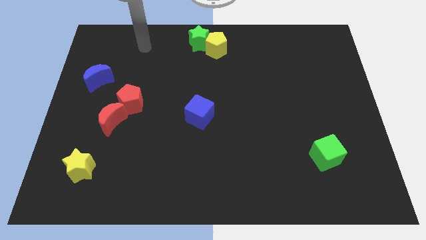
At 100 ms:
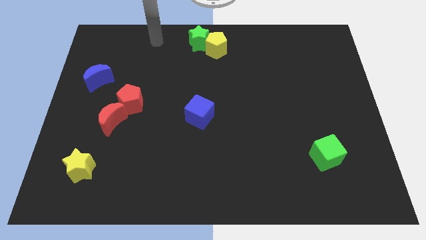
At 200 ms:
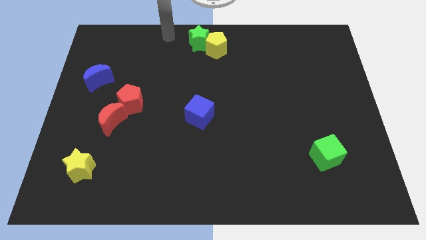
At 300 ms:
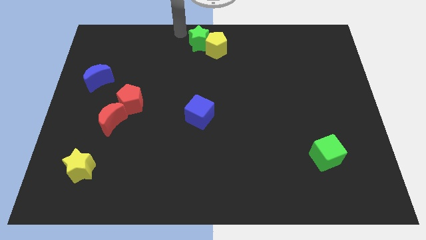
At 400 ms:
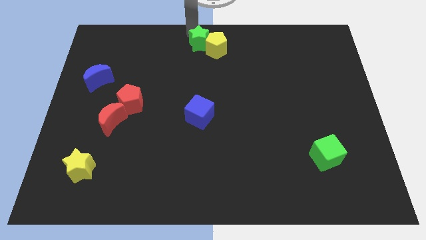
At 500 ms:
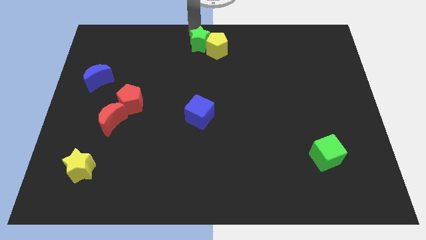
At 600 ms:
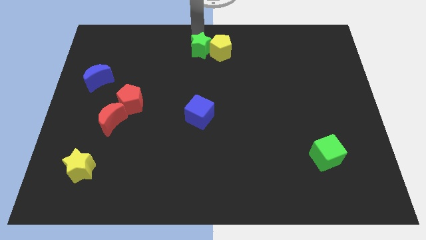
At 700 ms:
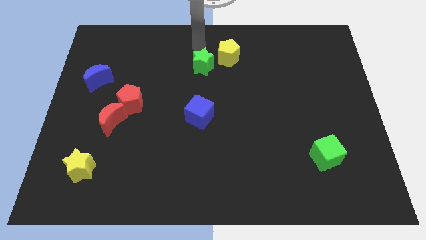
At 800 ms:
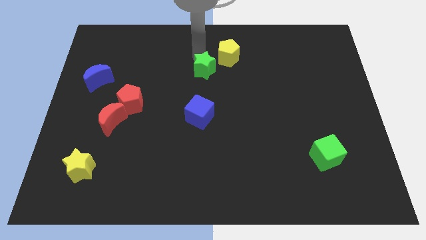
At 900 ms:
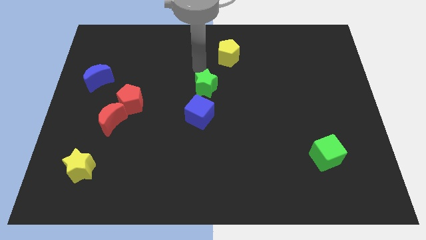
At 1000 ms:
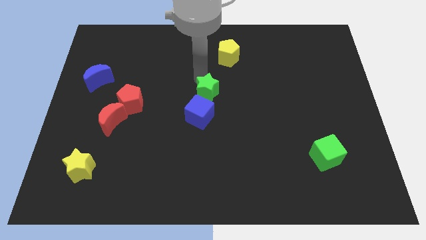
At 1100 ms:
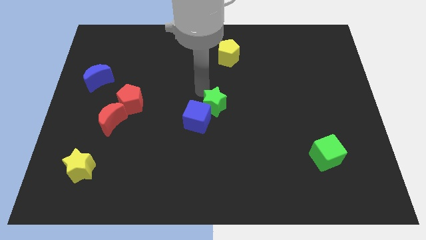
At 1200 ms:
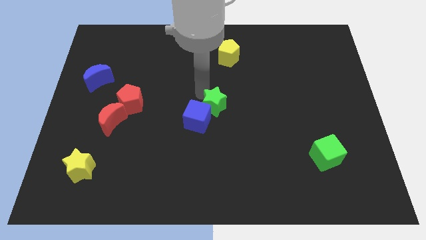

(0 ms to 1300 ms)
slide the green star into the blue moon

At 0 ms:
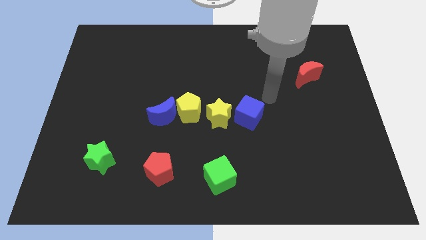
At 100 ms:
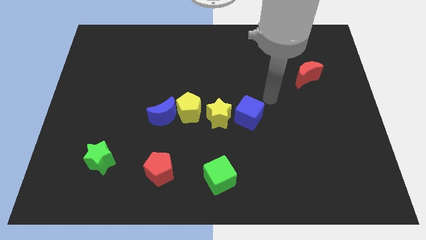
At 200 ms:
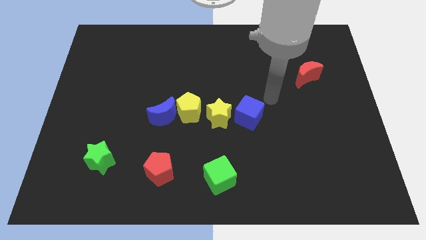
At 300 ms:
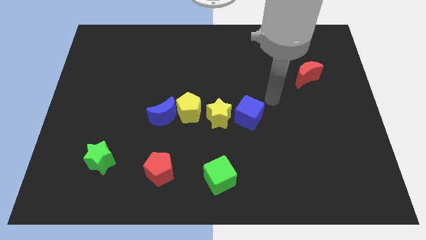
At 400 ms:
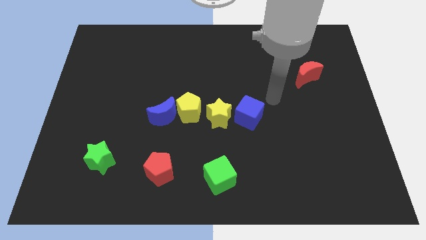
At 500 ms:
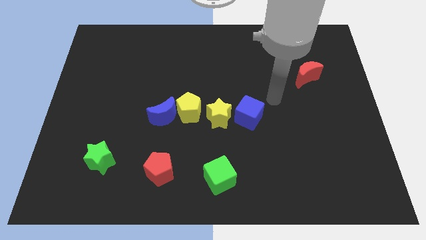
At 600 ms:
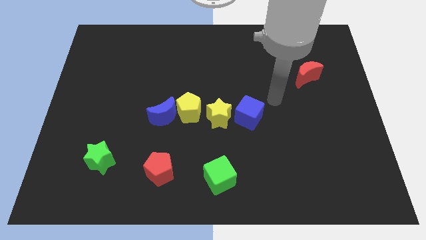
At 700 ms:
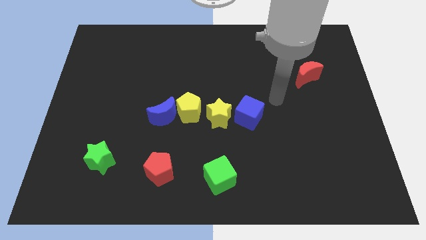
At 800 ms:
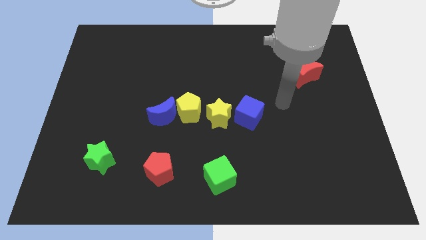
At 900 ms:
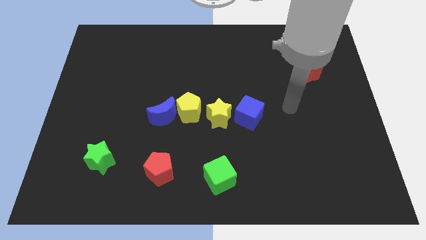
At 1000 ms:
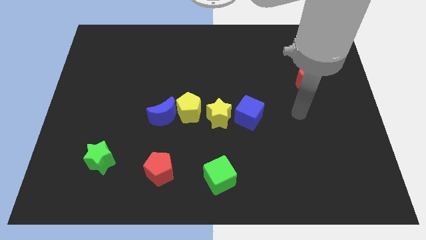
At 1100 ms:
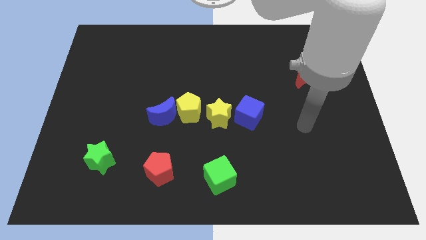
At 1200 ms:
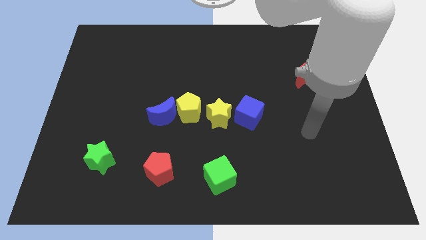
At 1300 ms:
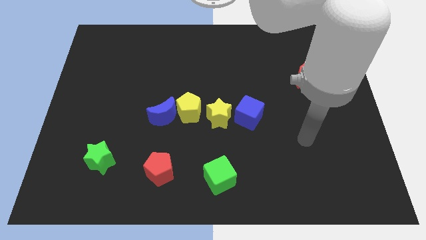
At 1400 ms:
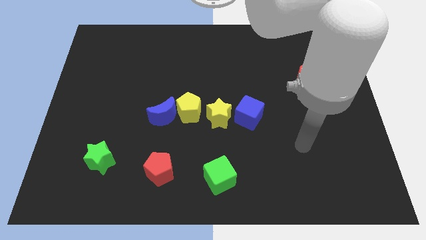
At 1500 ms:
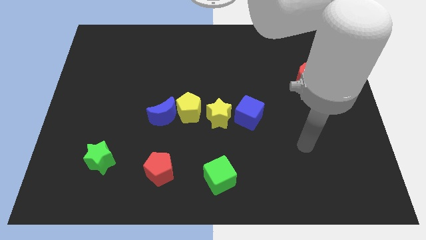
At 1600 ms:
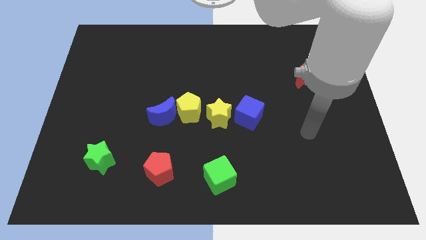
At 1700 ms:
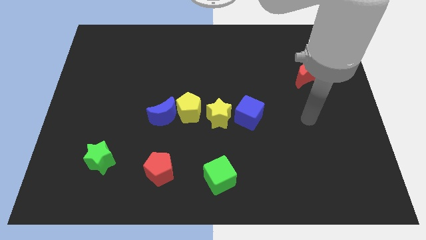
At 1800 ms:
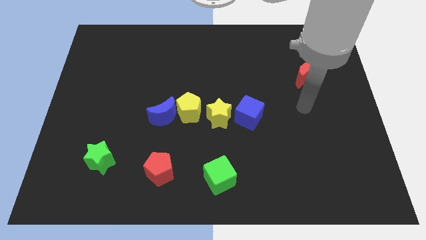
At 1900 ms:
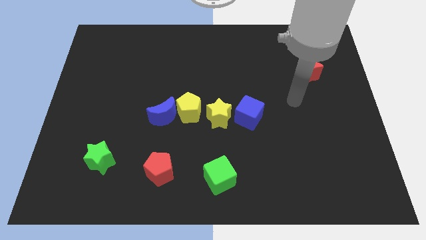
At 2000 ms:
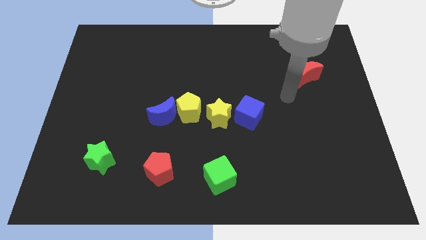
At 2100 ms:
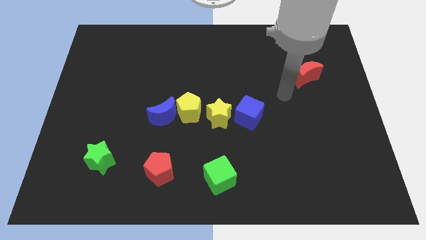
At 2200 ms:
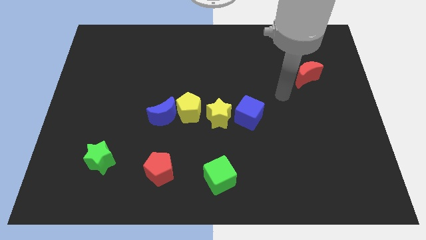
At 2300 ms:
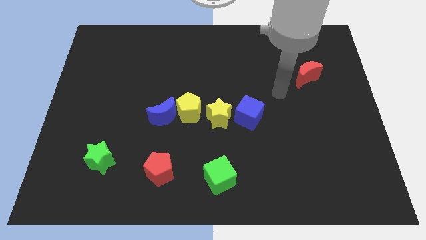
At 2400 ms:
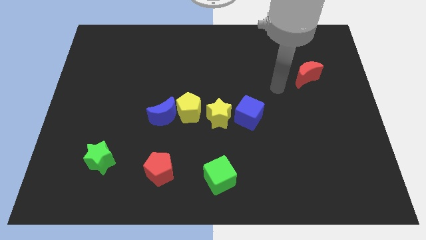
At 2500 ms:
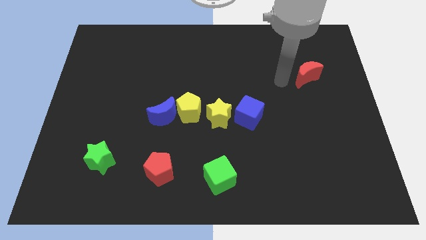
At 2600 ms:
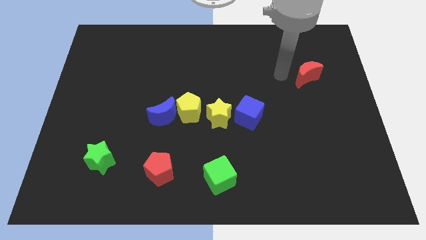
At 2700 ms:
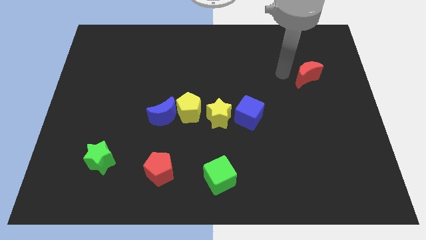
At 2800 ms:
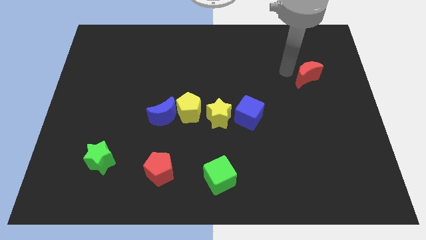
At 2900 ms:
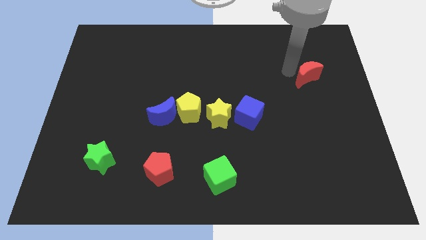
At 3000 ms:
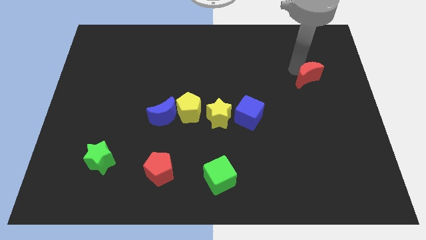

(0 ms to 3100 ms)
place the arm near the red moon

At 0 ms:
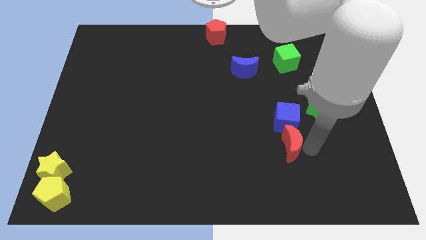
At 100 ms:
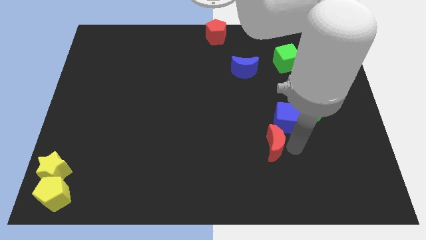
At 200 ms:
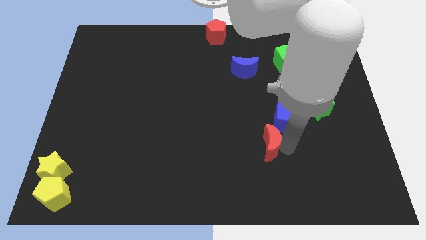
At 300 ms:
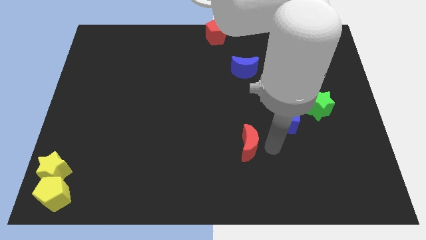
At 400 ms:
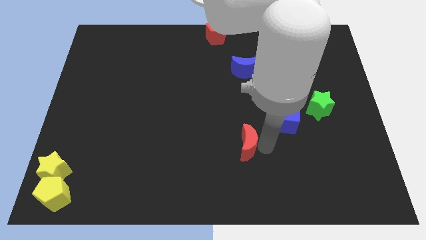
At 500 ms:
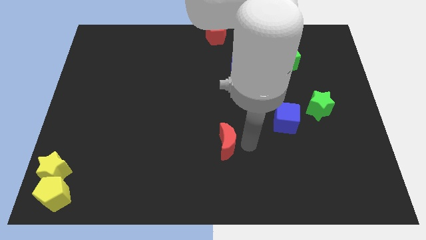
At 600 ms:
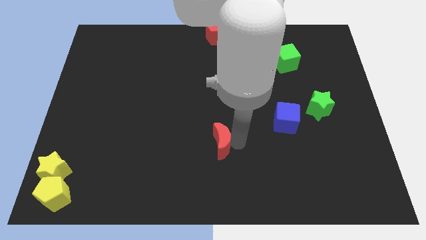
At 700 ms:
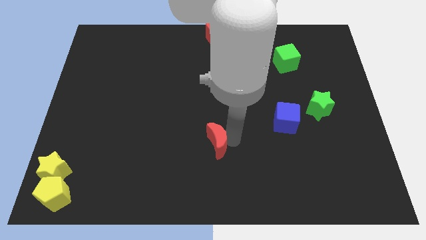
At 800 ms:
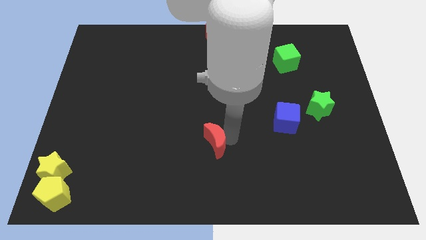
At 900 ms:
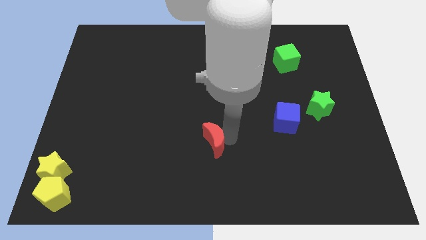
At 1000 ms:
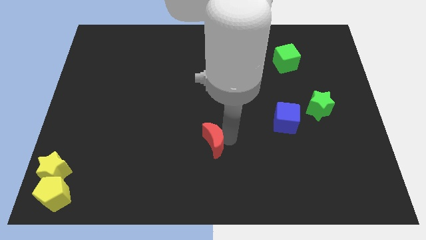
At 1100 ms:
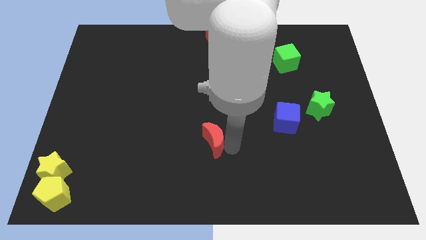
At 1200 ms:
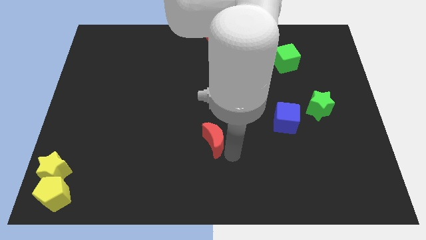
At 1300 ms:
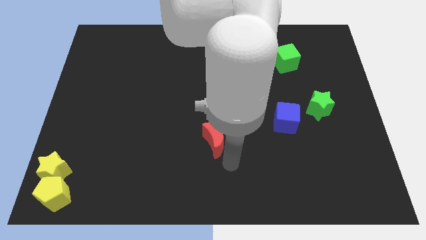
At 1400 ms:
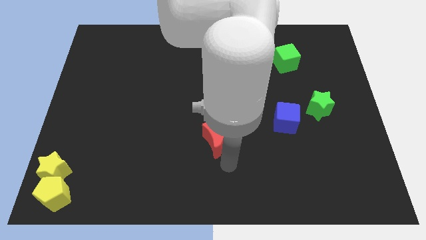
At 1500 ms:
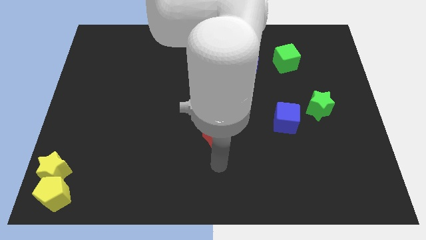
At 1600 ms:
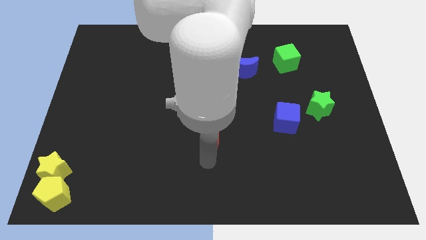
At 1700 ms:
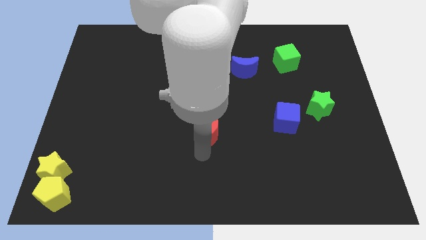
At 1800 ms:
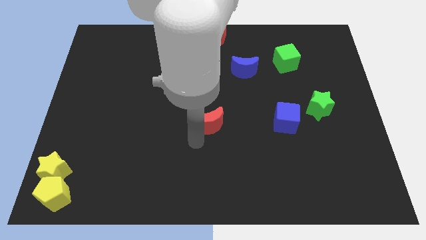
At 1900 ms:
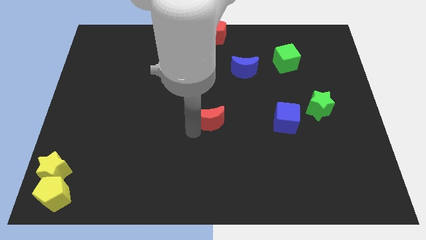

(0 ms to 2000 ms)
separate red moon from the blue cube

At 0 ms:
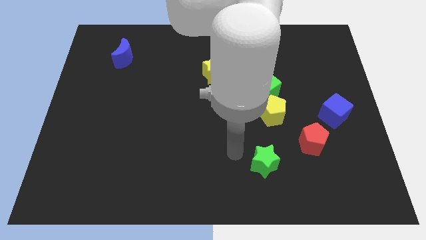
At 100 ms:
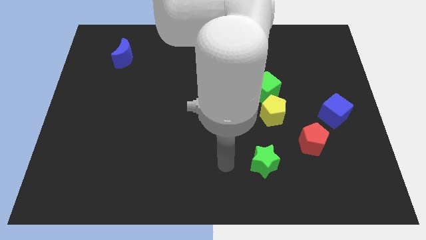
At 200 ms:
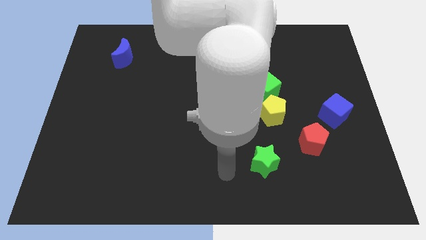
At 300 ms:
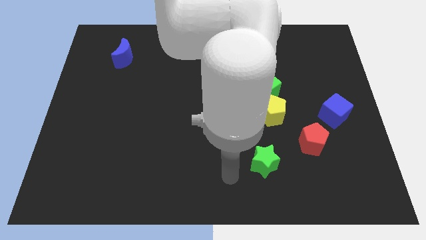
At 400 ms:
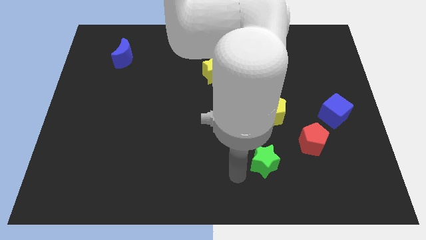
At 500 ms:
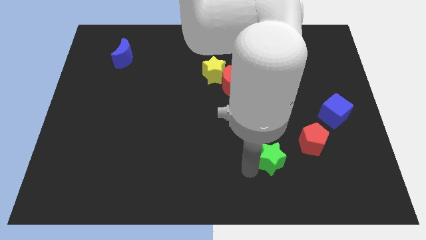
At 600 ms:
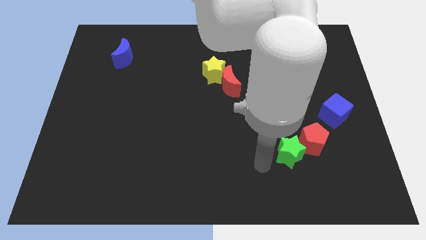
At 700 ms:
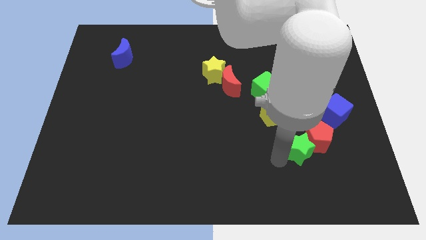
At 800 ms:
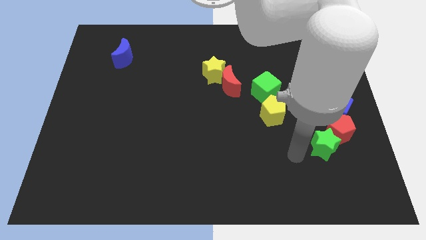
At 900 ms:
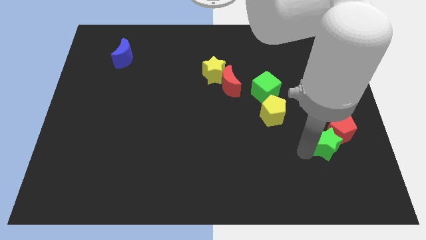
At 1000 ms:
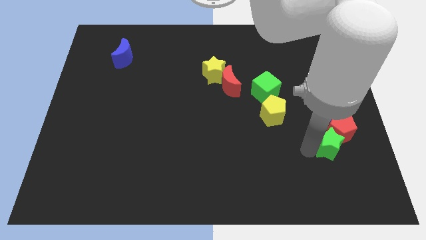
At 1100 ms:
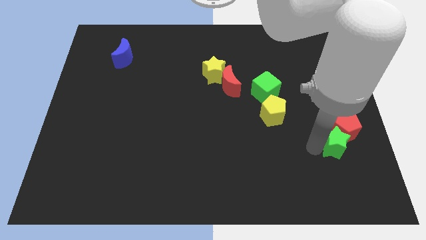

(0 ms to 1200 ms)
move the green star and red pentagon diagonally to the bottom right of the yellow pentagon

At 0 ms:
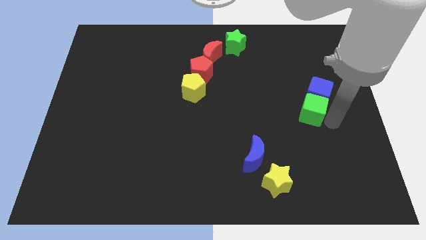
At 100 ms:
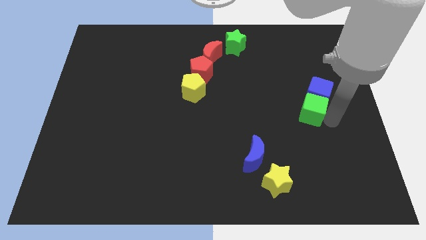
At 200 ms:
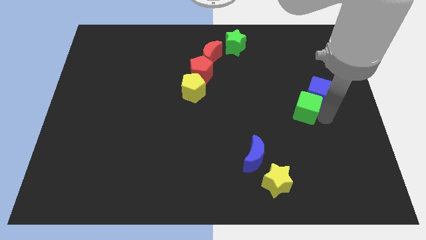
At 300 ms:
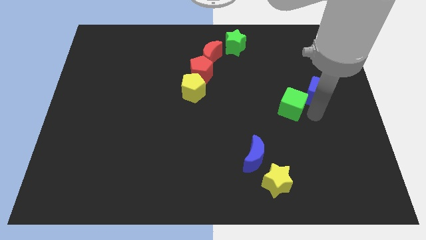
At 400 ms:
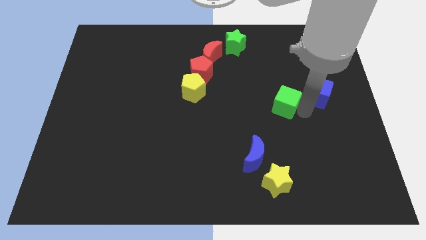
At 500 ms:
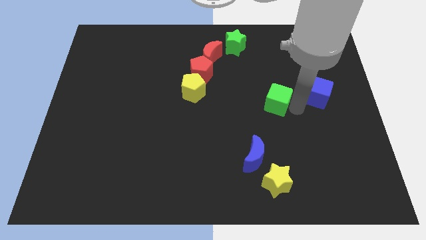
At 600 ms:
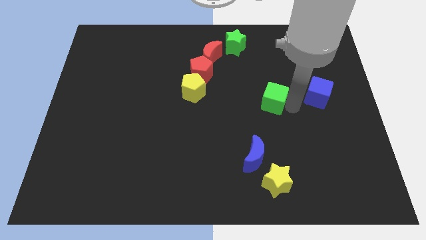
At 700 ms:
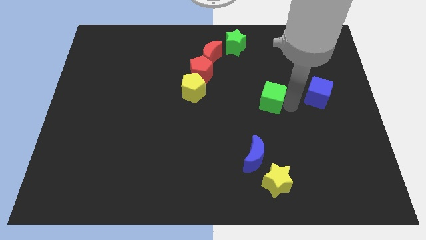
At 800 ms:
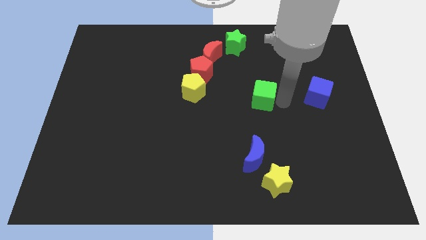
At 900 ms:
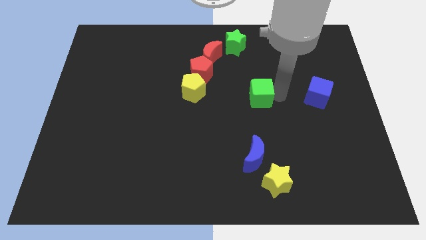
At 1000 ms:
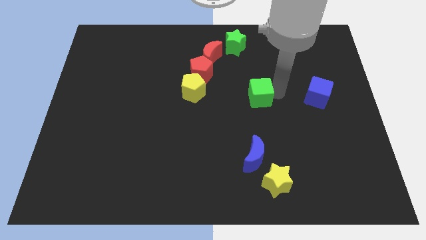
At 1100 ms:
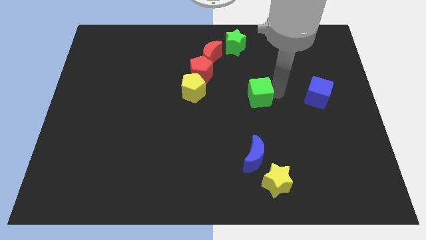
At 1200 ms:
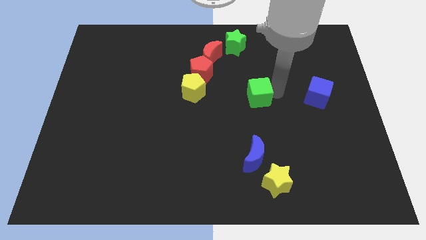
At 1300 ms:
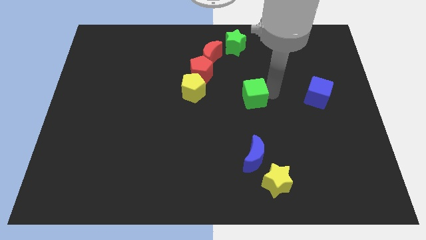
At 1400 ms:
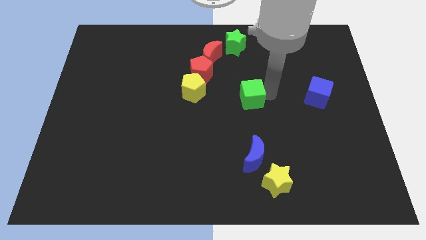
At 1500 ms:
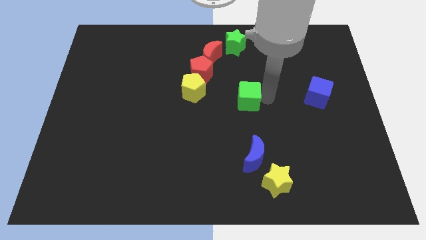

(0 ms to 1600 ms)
separate the green cube from the blue cube
